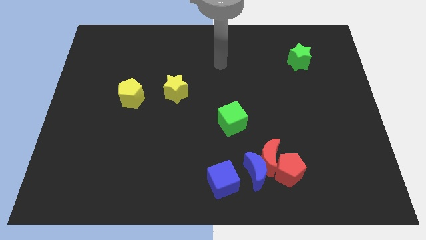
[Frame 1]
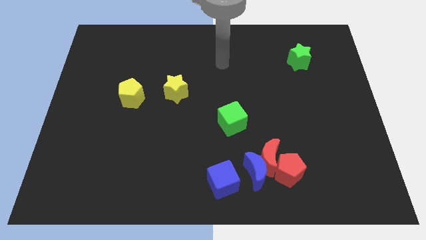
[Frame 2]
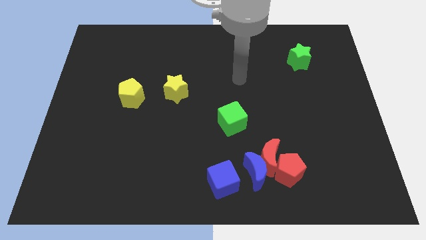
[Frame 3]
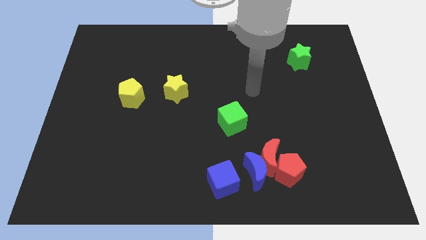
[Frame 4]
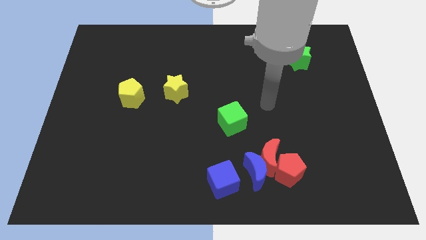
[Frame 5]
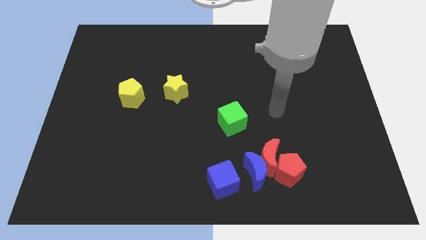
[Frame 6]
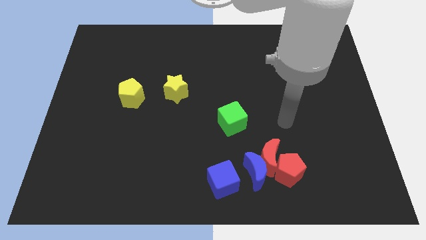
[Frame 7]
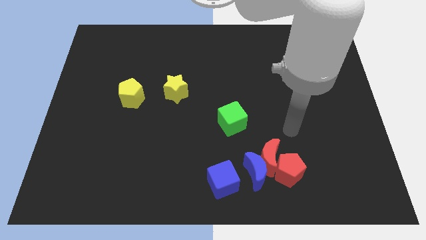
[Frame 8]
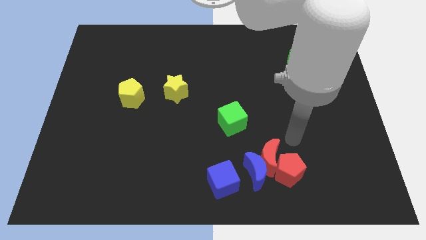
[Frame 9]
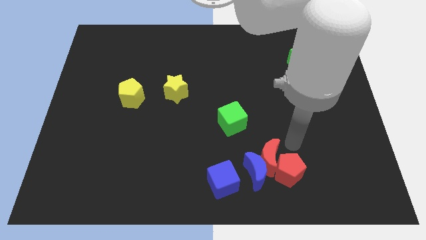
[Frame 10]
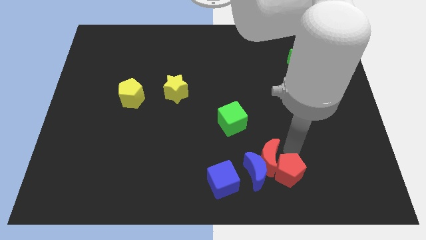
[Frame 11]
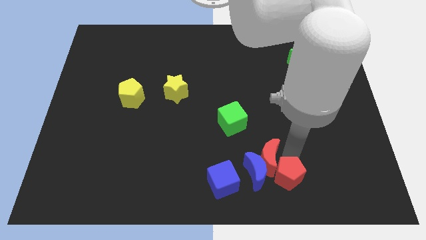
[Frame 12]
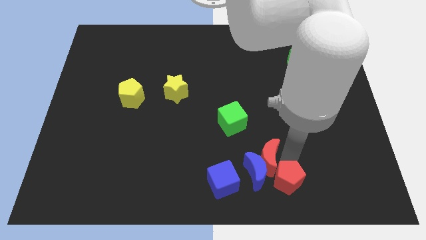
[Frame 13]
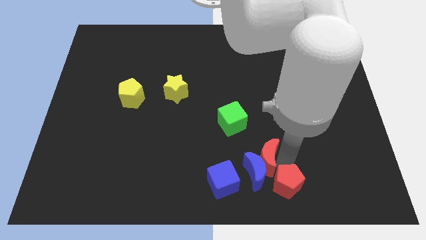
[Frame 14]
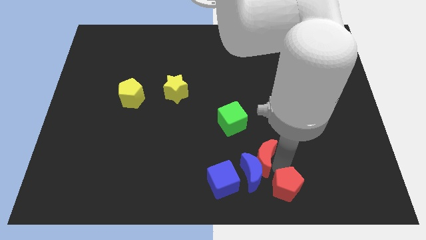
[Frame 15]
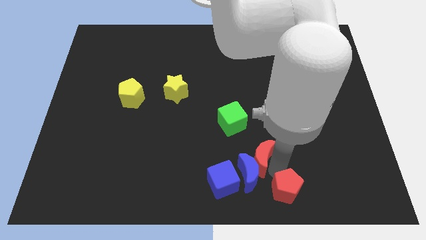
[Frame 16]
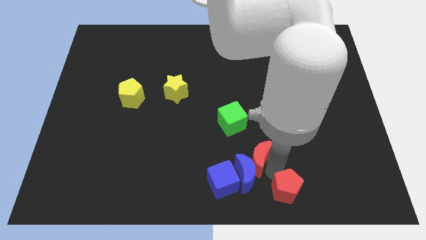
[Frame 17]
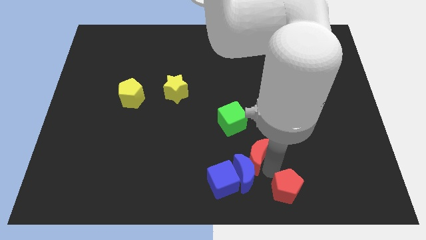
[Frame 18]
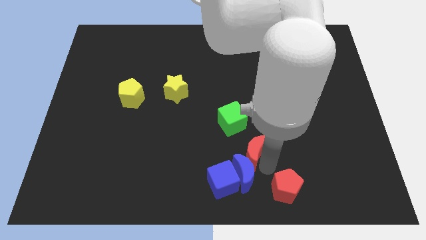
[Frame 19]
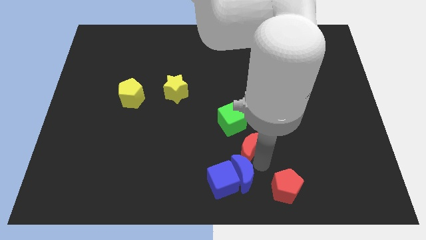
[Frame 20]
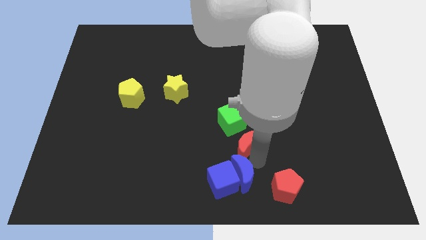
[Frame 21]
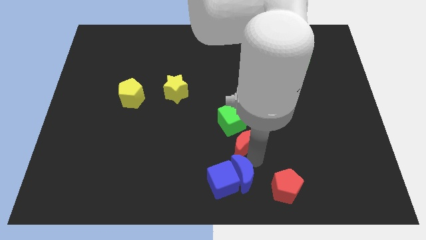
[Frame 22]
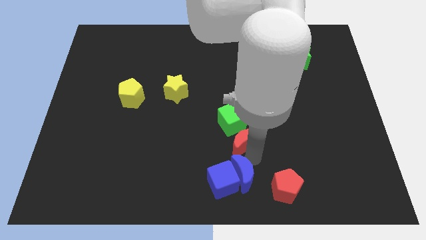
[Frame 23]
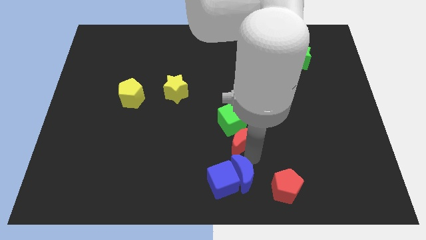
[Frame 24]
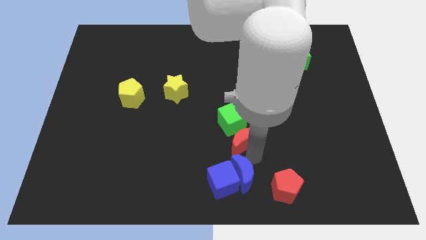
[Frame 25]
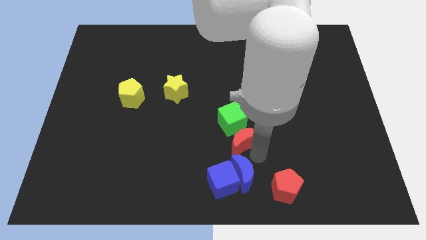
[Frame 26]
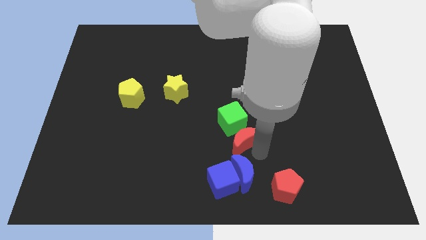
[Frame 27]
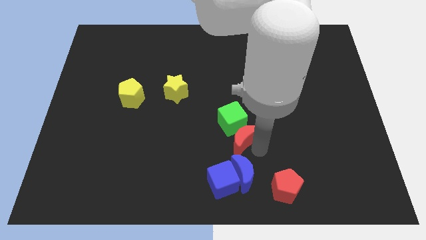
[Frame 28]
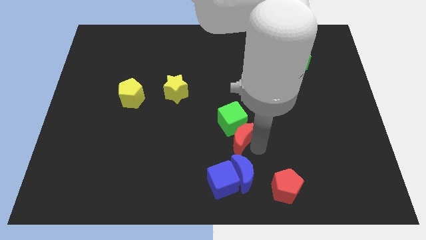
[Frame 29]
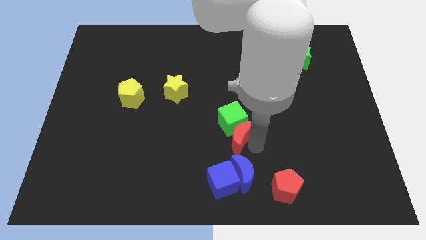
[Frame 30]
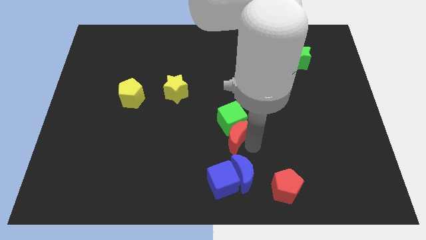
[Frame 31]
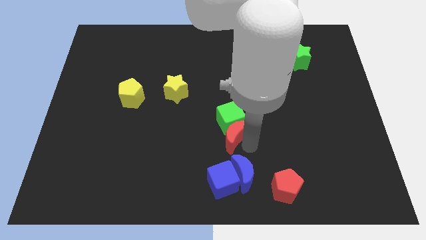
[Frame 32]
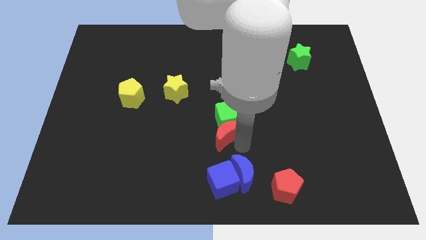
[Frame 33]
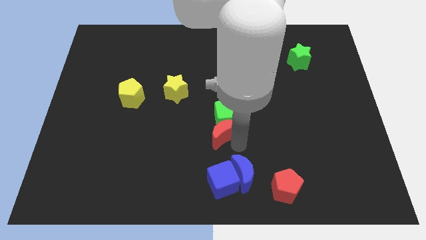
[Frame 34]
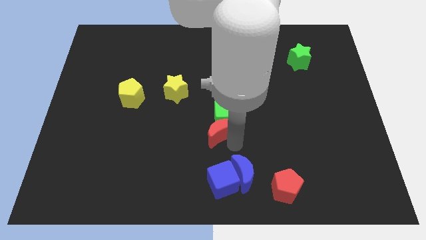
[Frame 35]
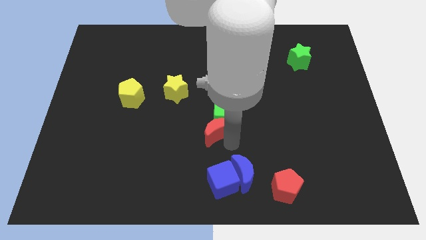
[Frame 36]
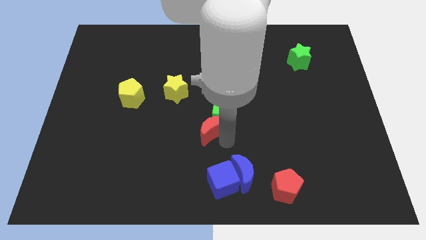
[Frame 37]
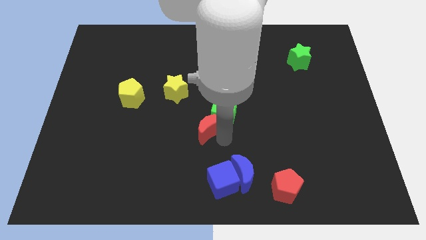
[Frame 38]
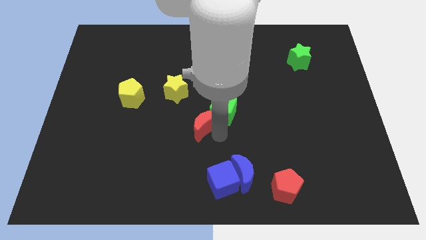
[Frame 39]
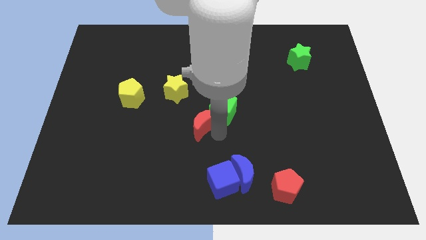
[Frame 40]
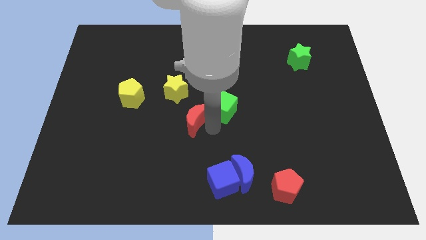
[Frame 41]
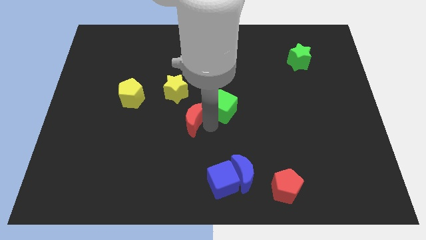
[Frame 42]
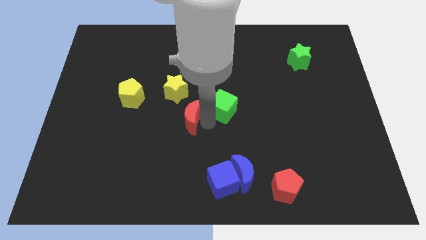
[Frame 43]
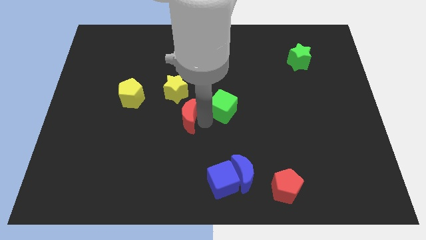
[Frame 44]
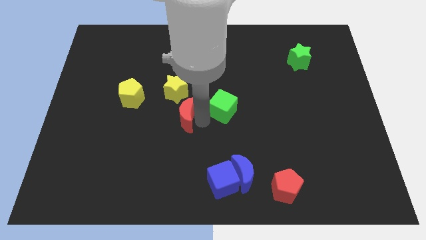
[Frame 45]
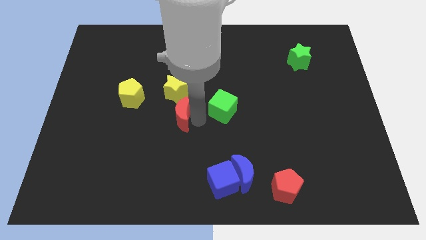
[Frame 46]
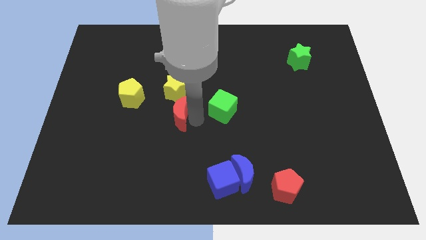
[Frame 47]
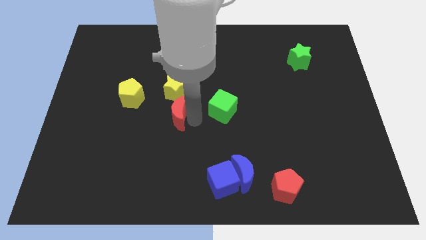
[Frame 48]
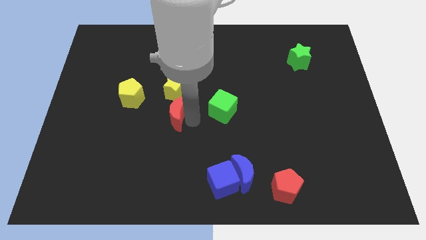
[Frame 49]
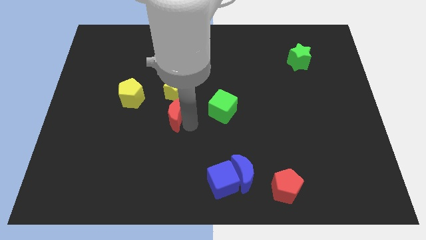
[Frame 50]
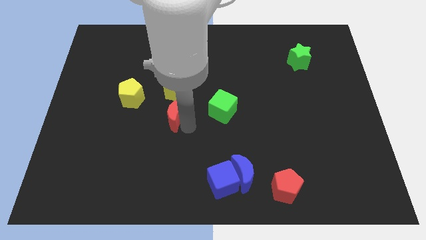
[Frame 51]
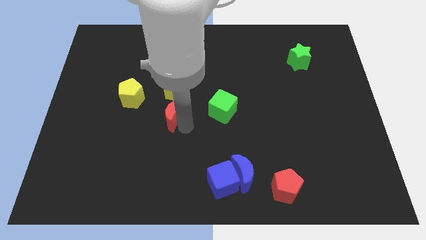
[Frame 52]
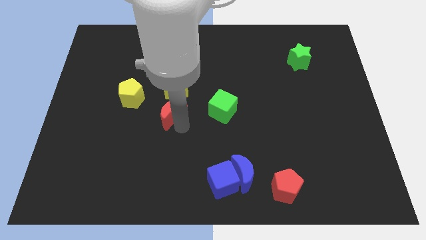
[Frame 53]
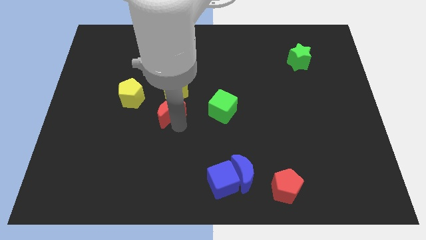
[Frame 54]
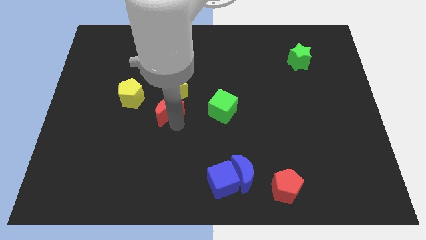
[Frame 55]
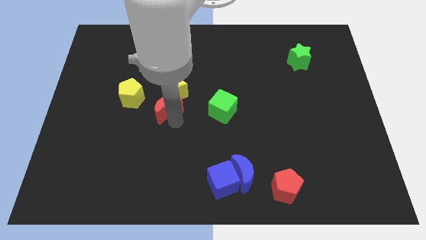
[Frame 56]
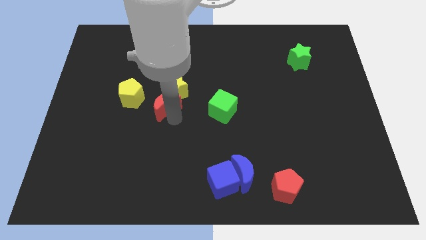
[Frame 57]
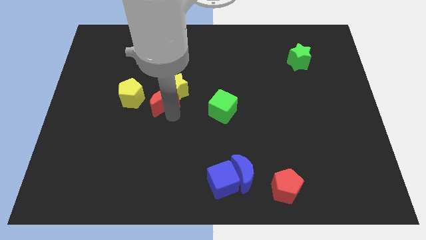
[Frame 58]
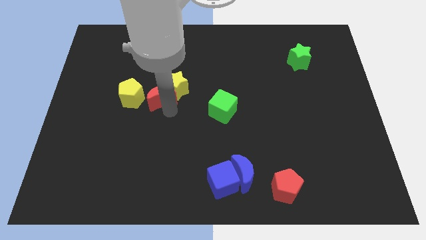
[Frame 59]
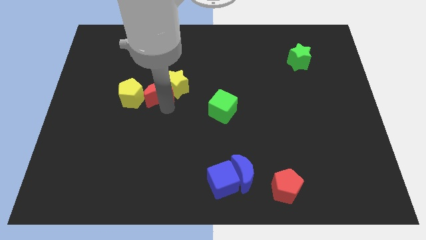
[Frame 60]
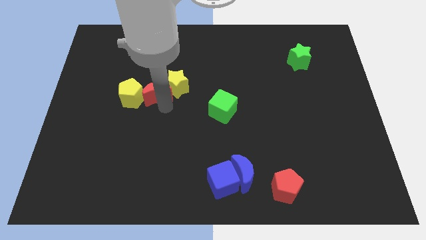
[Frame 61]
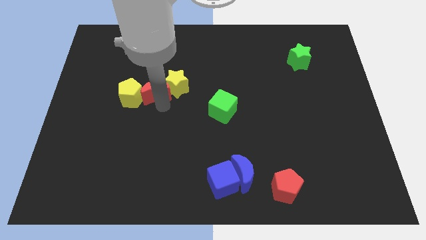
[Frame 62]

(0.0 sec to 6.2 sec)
move the red moon towards the yellow pentagon

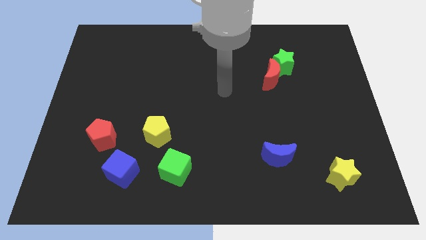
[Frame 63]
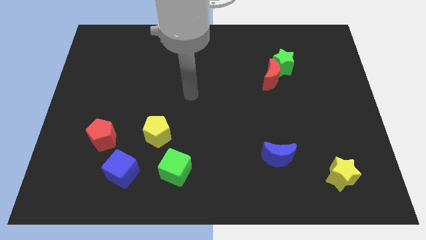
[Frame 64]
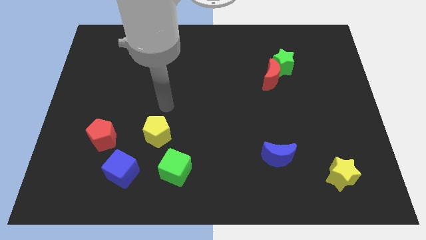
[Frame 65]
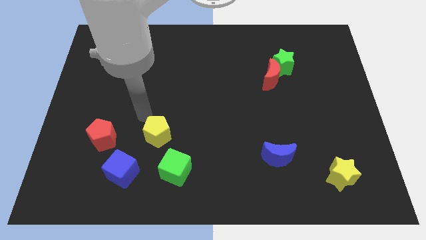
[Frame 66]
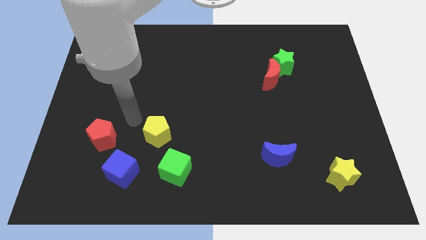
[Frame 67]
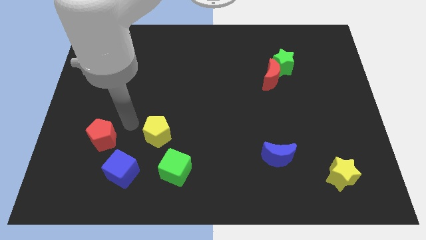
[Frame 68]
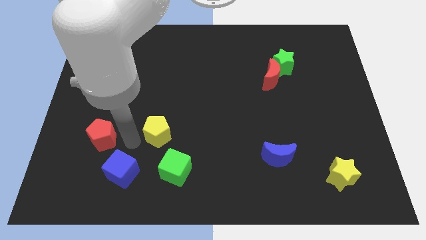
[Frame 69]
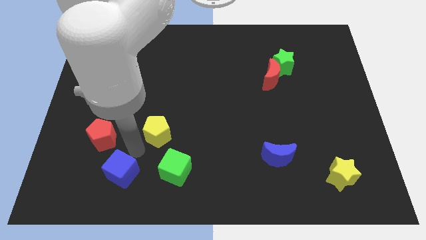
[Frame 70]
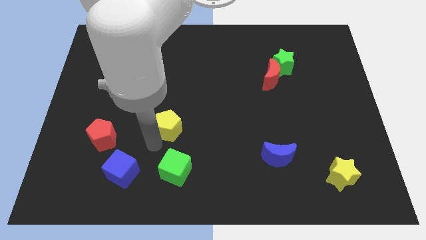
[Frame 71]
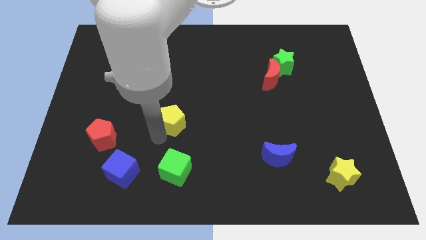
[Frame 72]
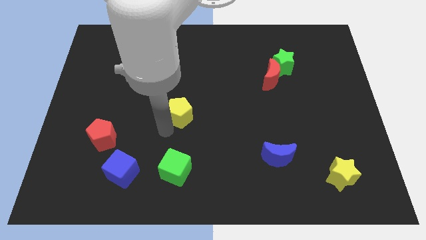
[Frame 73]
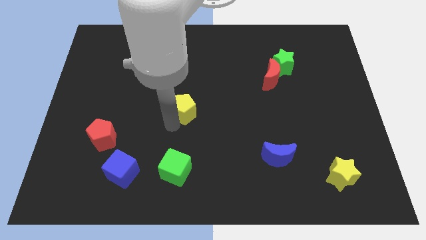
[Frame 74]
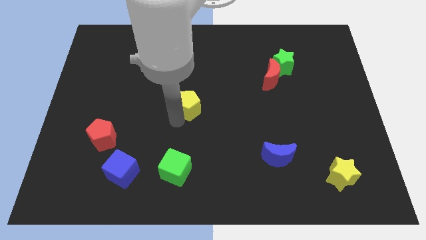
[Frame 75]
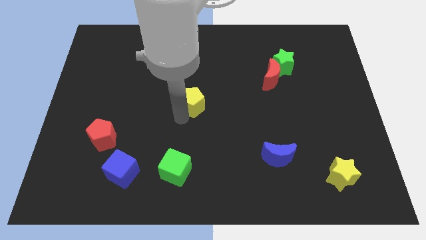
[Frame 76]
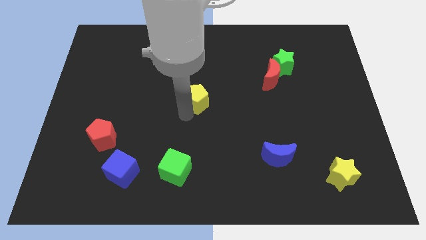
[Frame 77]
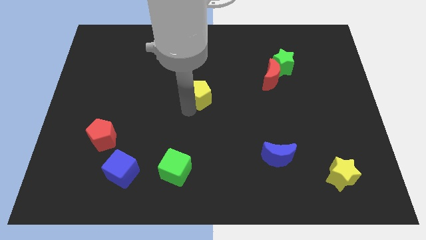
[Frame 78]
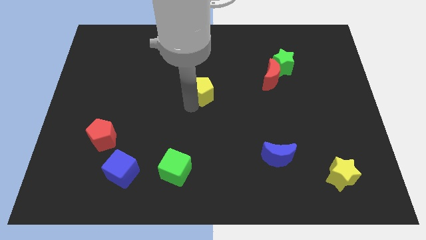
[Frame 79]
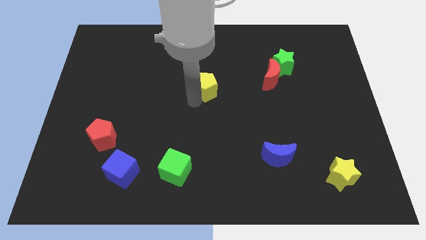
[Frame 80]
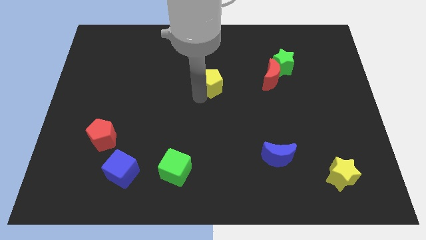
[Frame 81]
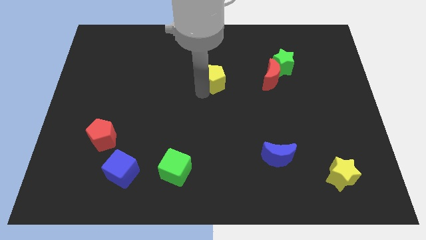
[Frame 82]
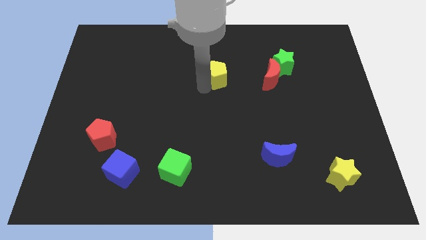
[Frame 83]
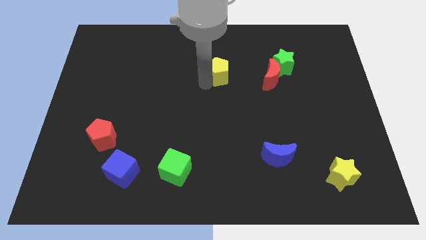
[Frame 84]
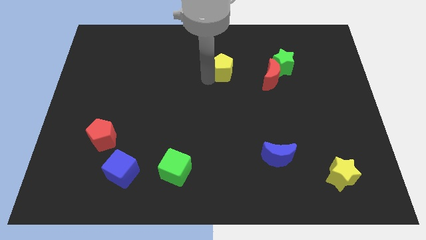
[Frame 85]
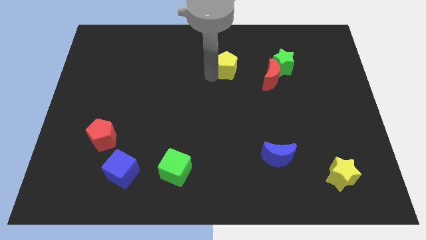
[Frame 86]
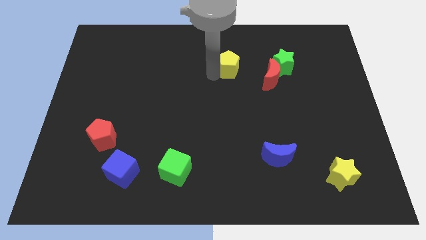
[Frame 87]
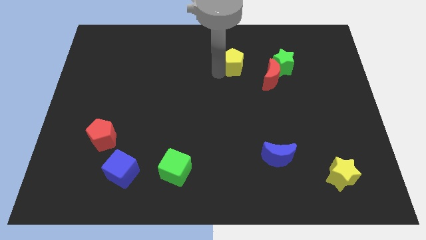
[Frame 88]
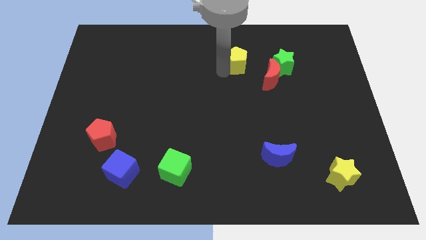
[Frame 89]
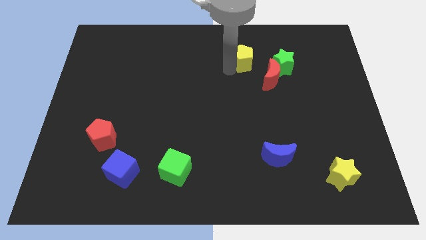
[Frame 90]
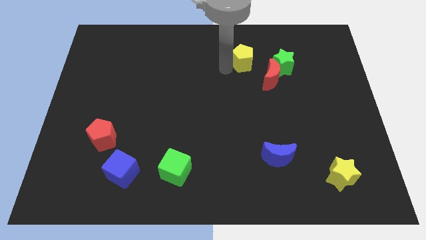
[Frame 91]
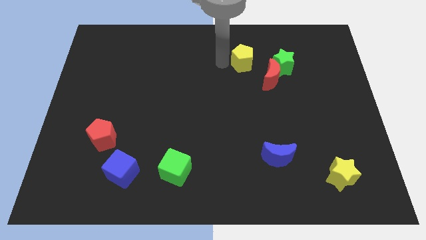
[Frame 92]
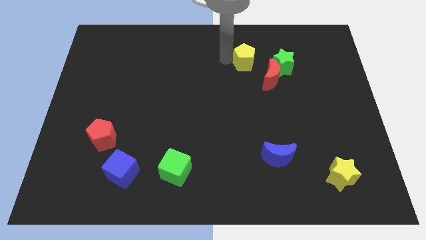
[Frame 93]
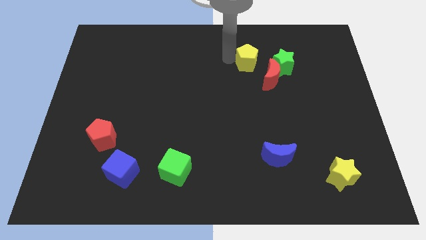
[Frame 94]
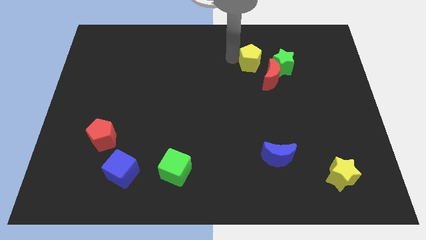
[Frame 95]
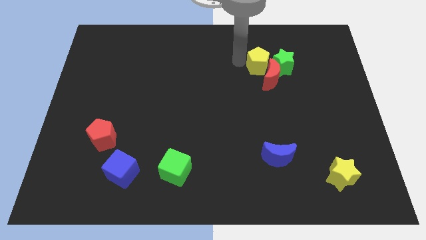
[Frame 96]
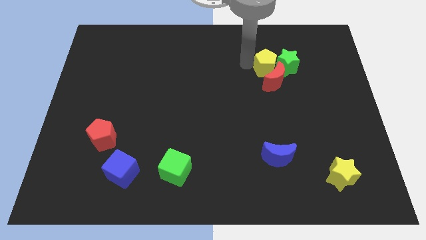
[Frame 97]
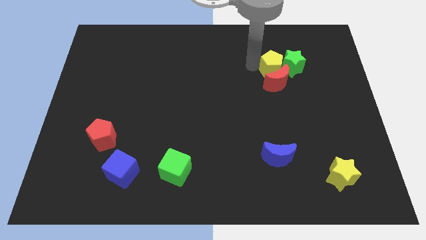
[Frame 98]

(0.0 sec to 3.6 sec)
push the yellow pentagon next to the green star
